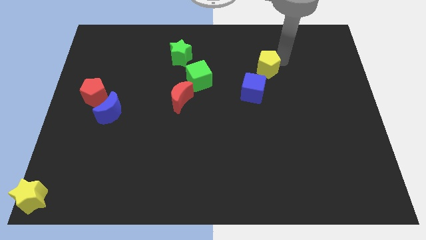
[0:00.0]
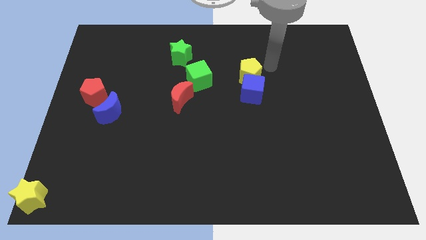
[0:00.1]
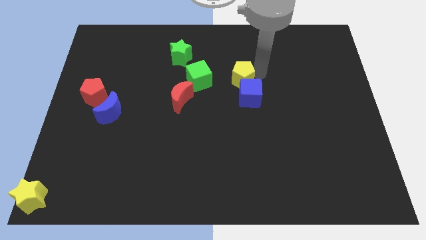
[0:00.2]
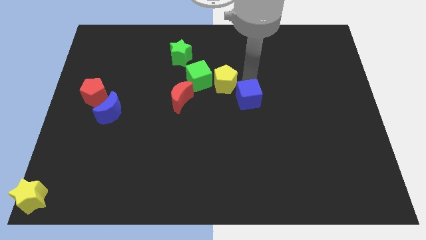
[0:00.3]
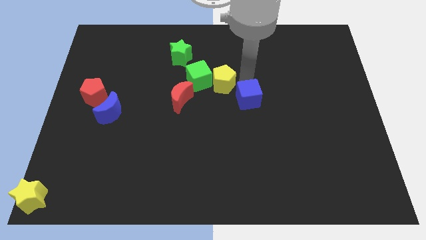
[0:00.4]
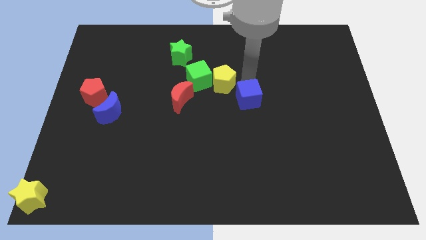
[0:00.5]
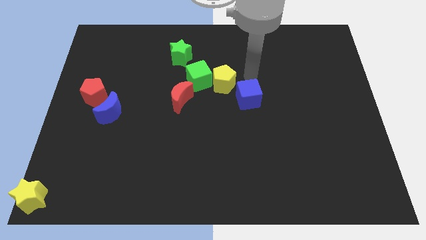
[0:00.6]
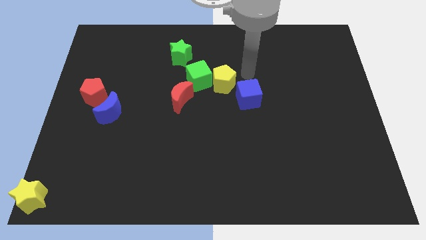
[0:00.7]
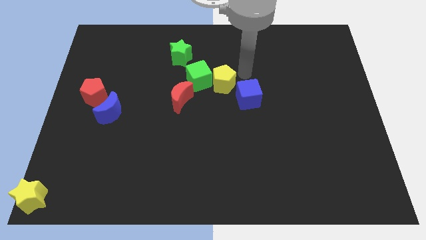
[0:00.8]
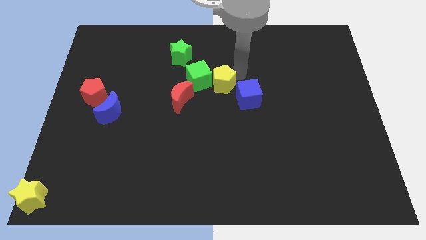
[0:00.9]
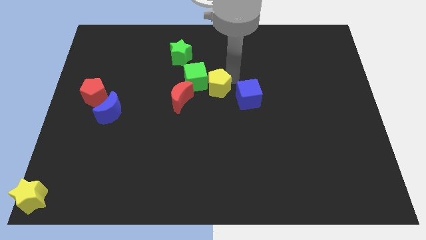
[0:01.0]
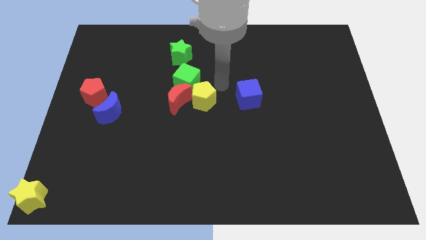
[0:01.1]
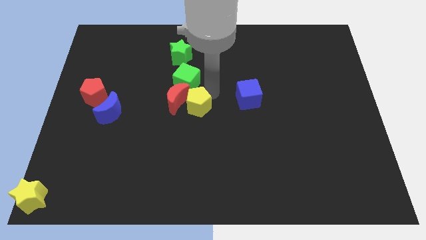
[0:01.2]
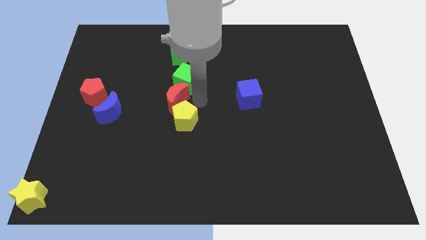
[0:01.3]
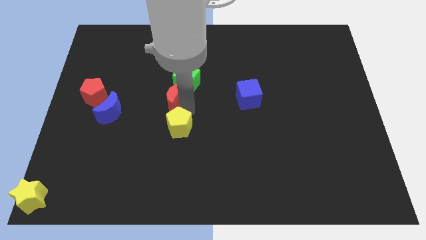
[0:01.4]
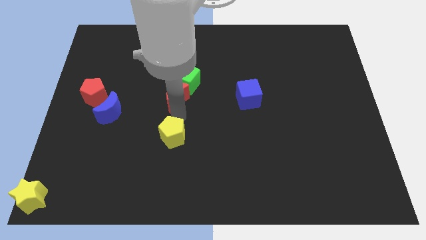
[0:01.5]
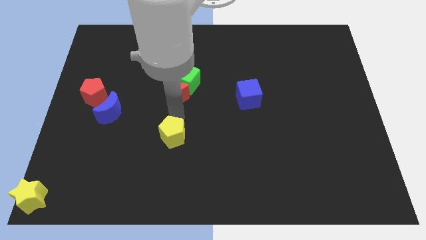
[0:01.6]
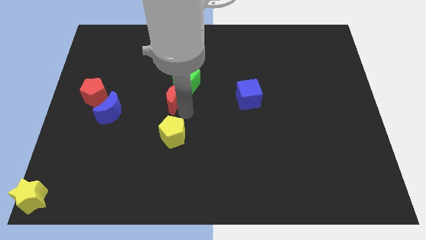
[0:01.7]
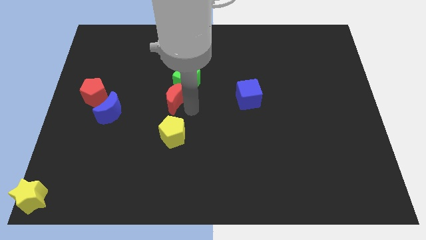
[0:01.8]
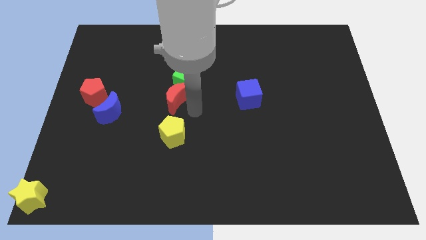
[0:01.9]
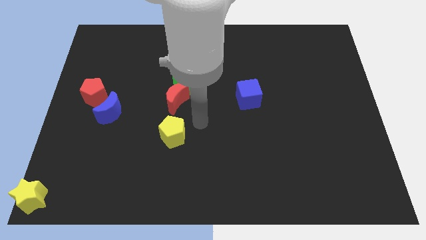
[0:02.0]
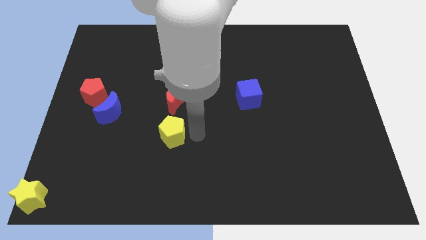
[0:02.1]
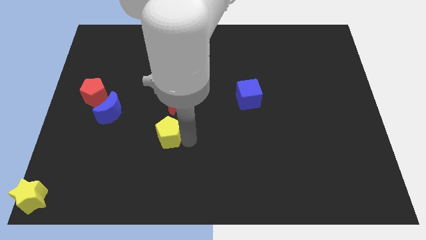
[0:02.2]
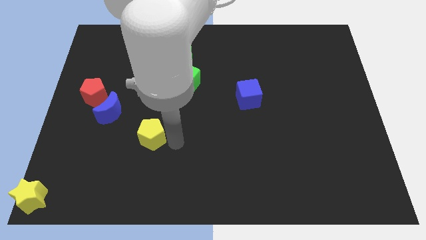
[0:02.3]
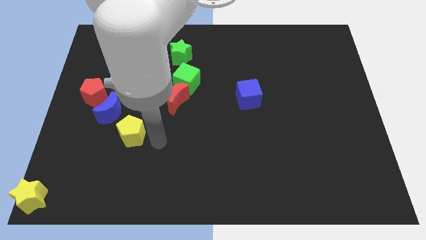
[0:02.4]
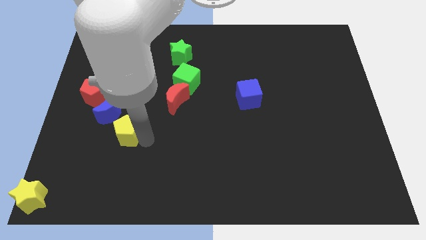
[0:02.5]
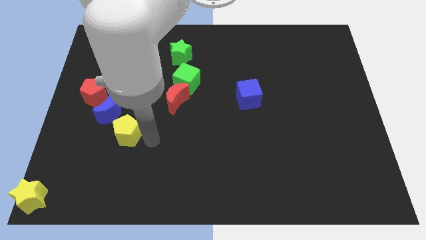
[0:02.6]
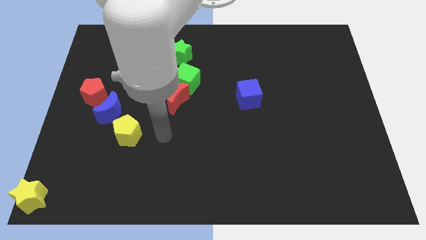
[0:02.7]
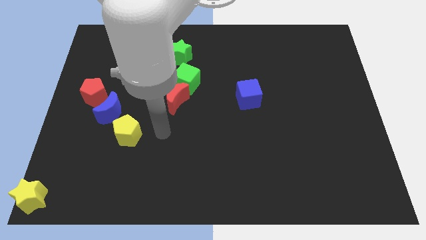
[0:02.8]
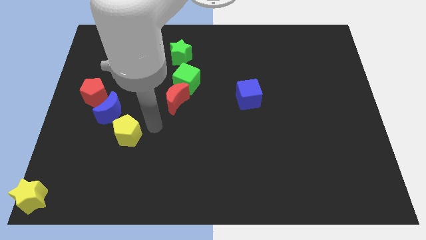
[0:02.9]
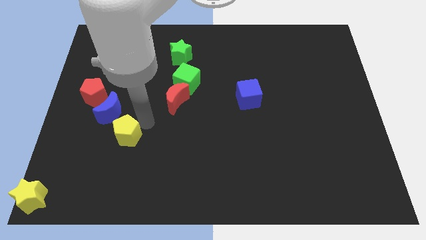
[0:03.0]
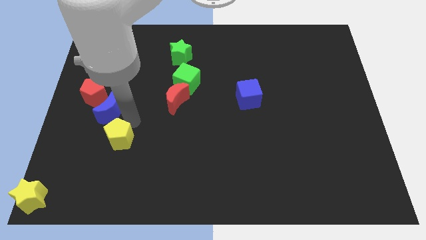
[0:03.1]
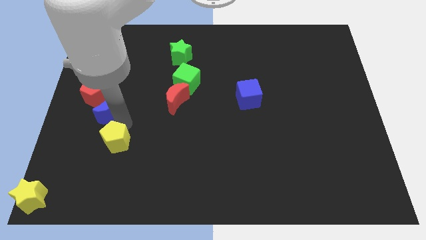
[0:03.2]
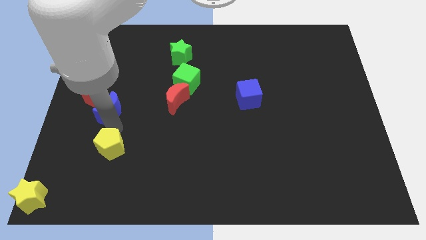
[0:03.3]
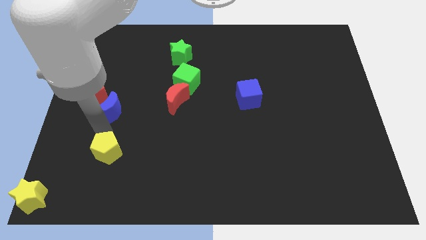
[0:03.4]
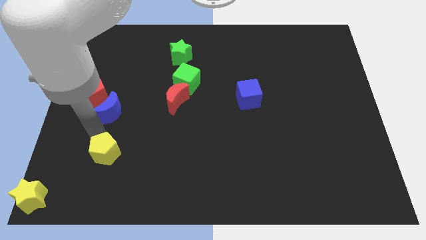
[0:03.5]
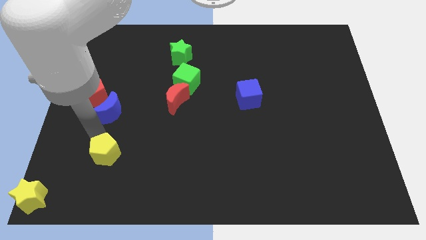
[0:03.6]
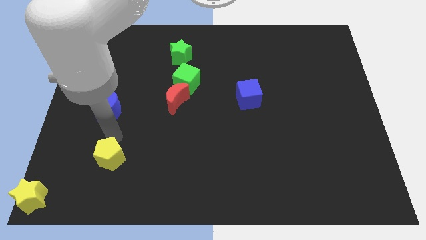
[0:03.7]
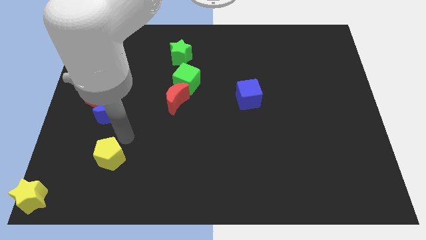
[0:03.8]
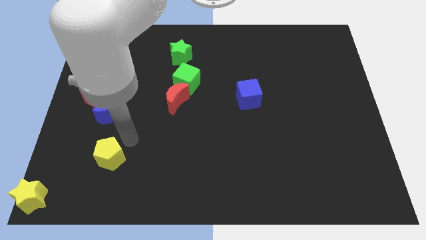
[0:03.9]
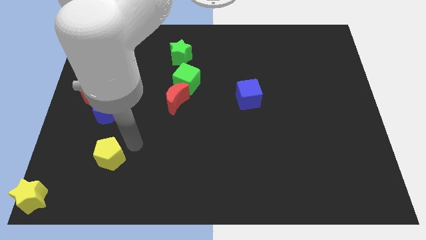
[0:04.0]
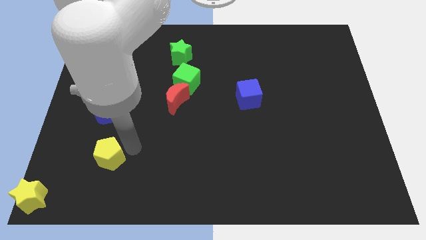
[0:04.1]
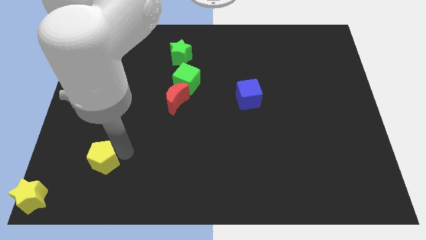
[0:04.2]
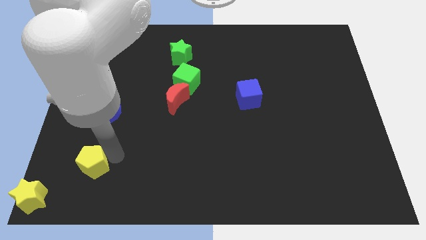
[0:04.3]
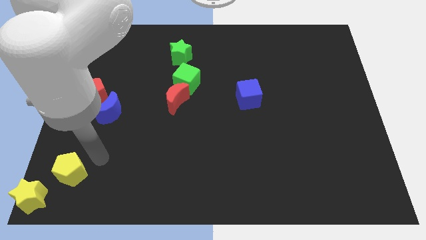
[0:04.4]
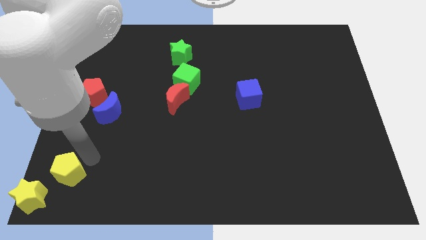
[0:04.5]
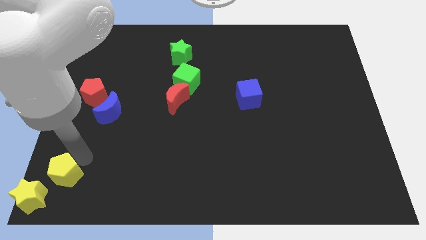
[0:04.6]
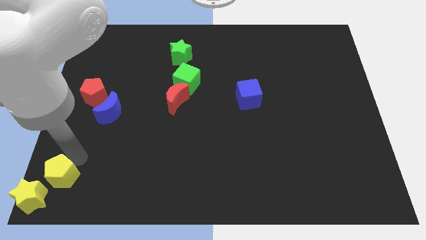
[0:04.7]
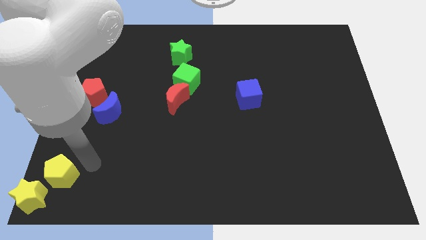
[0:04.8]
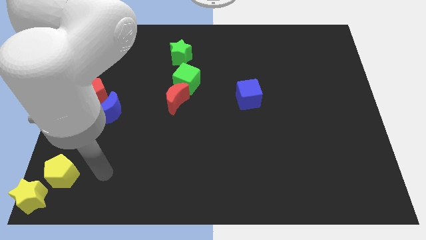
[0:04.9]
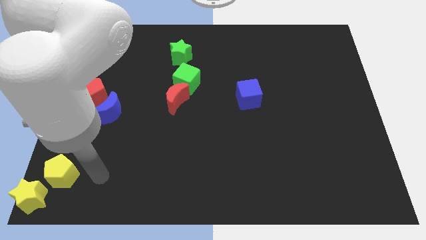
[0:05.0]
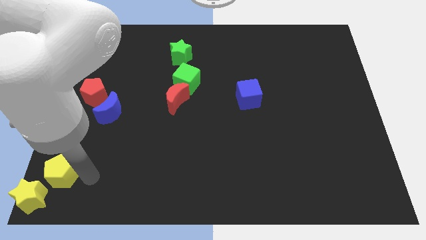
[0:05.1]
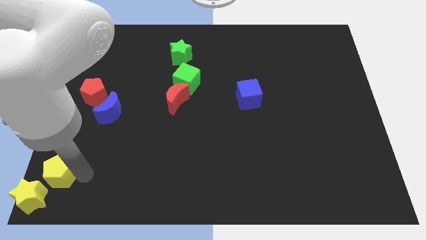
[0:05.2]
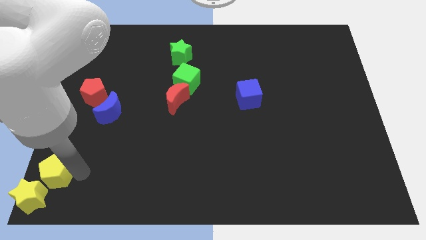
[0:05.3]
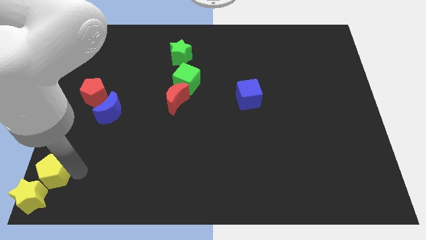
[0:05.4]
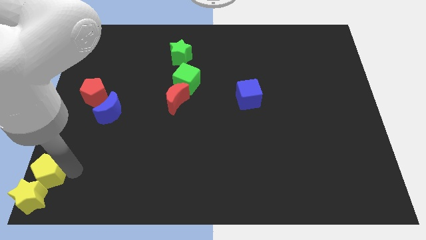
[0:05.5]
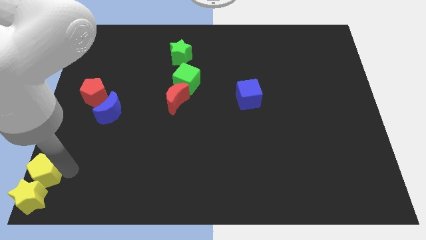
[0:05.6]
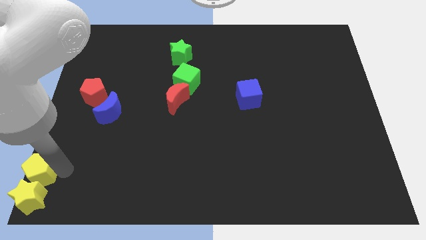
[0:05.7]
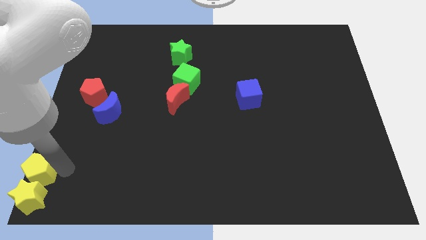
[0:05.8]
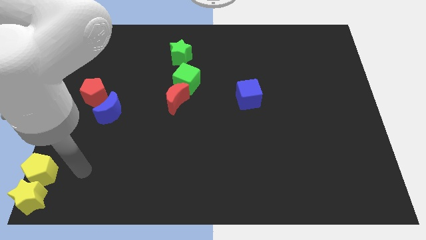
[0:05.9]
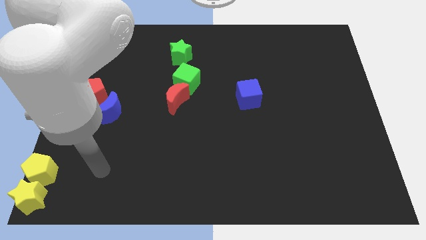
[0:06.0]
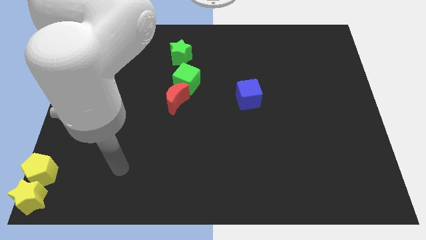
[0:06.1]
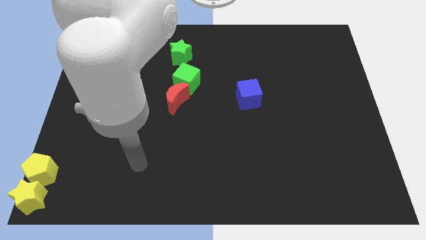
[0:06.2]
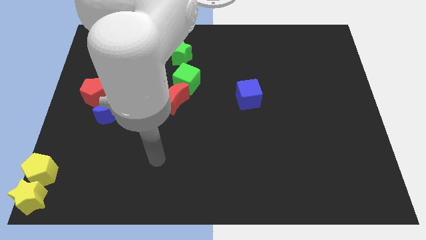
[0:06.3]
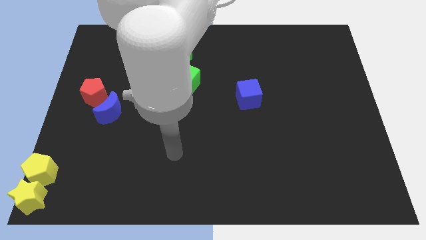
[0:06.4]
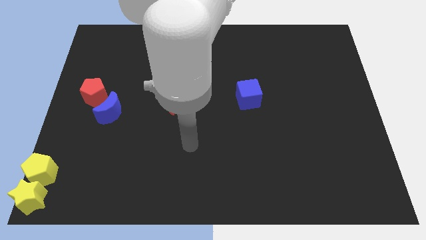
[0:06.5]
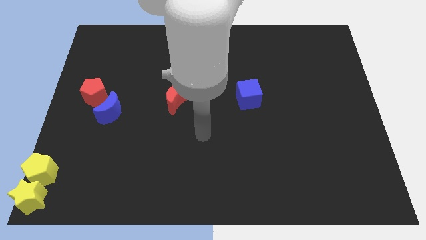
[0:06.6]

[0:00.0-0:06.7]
place the yellow pentagon above the yellow star

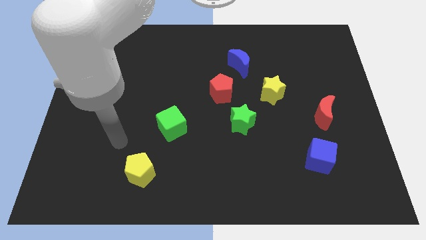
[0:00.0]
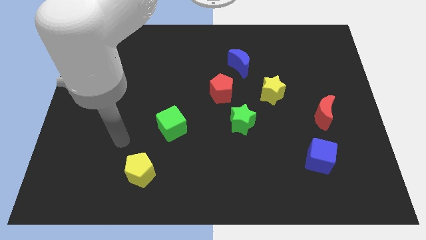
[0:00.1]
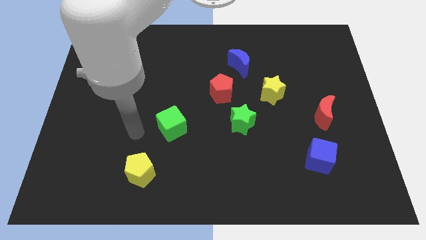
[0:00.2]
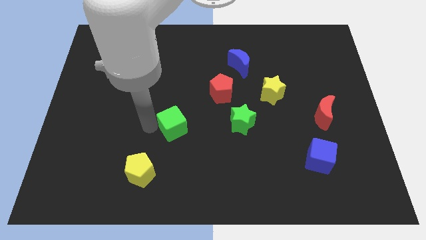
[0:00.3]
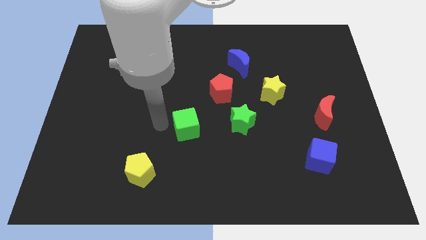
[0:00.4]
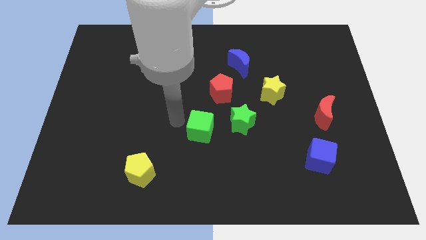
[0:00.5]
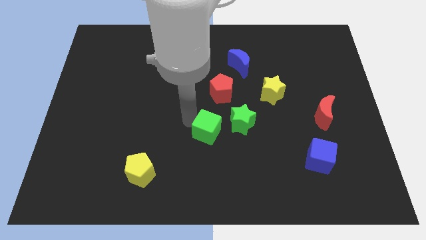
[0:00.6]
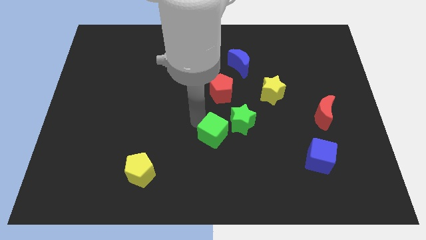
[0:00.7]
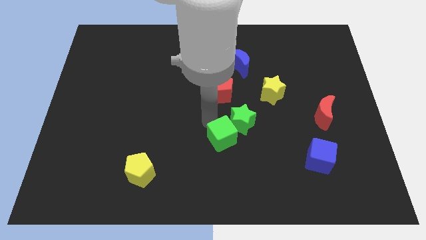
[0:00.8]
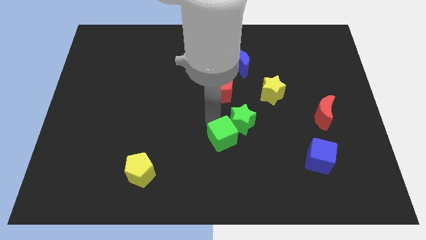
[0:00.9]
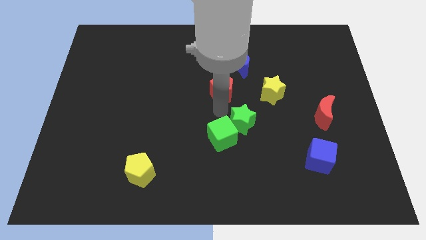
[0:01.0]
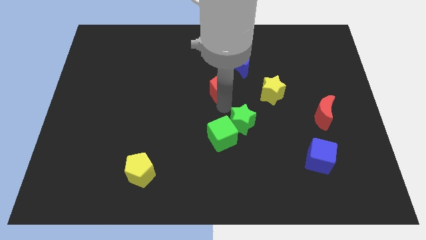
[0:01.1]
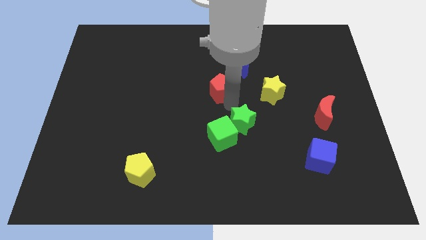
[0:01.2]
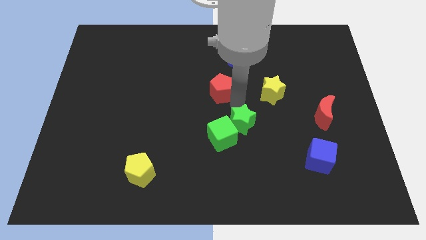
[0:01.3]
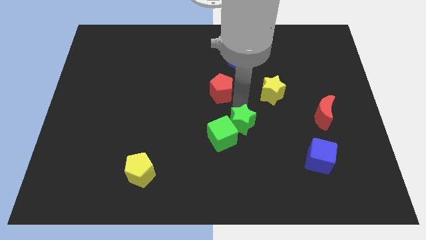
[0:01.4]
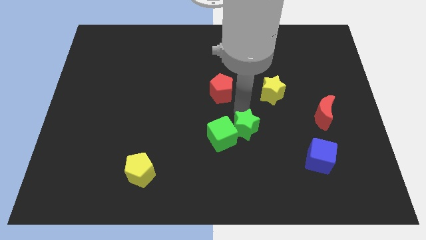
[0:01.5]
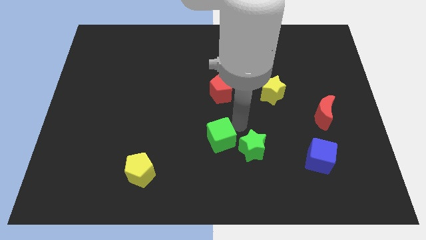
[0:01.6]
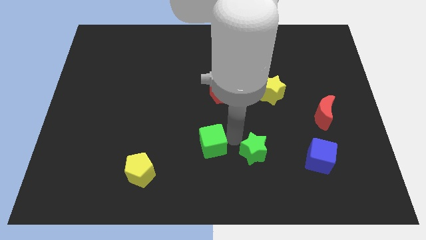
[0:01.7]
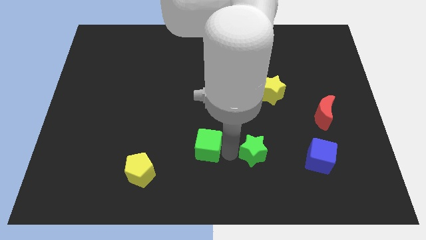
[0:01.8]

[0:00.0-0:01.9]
move the green cube and green star towards bottom

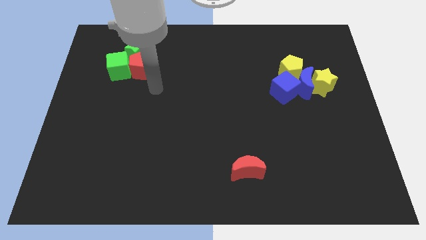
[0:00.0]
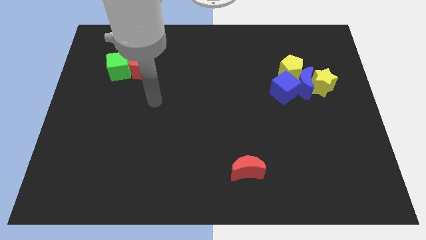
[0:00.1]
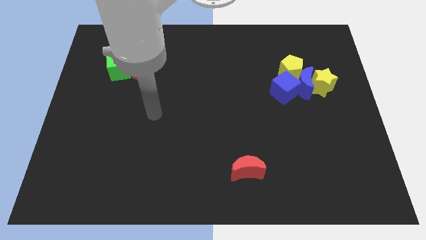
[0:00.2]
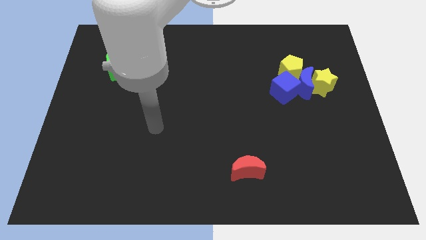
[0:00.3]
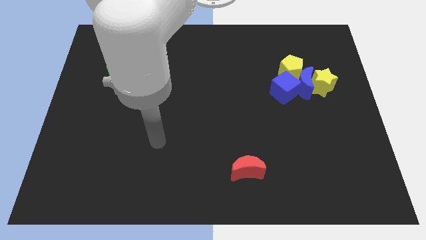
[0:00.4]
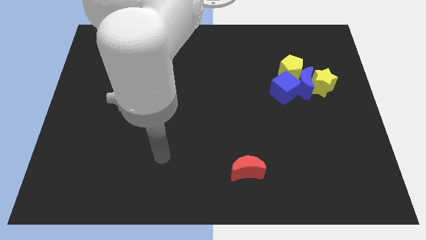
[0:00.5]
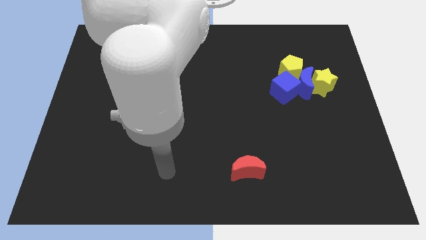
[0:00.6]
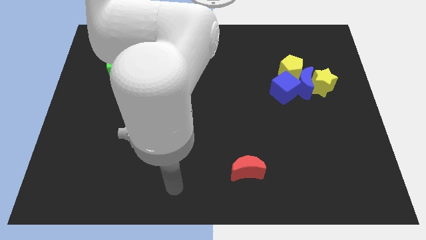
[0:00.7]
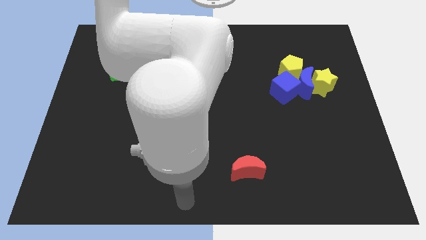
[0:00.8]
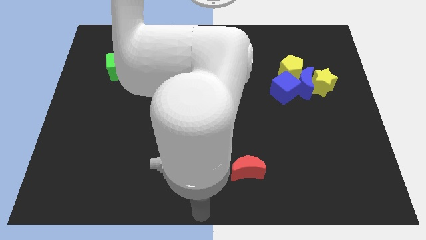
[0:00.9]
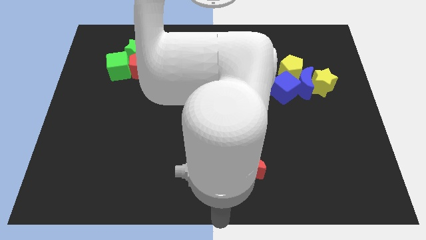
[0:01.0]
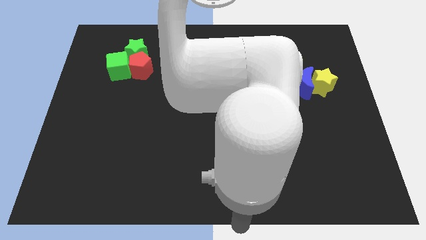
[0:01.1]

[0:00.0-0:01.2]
place your arm at the bottom center of the board
